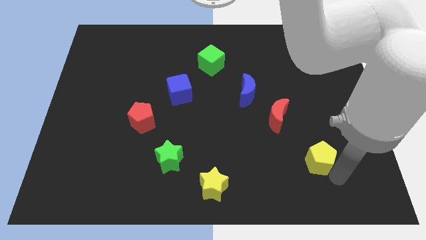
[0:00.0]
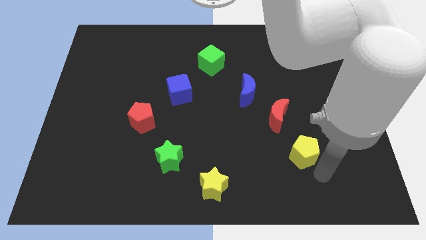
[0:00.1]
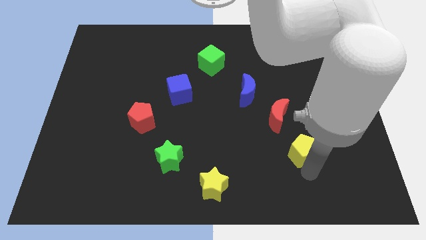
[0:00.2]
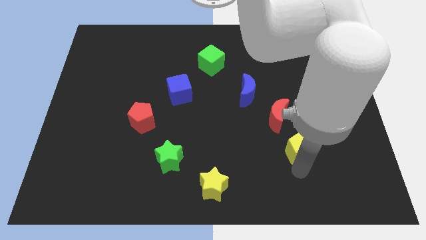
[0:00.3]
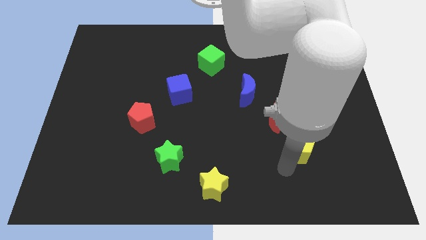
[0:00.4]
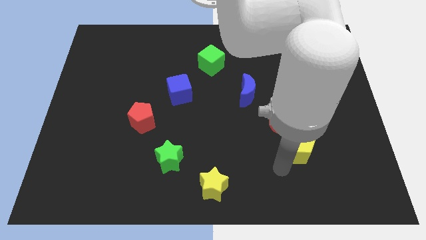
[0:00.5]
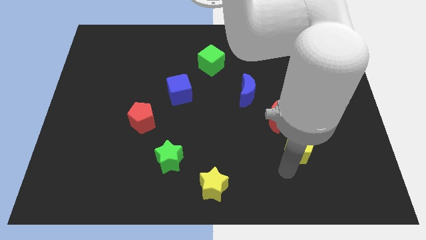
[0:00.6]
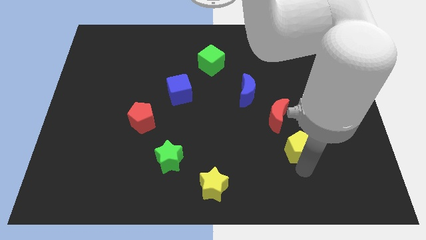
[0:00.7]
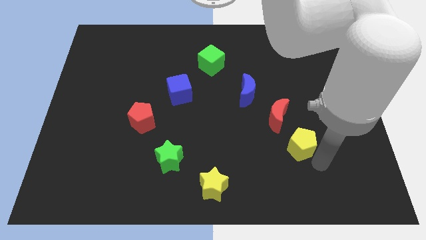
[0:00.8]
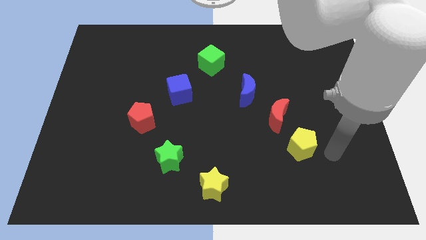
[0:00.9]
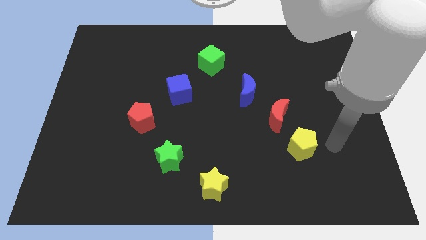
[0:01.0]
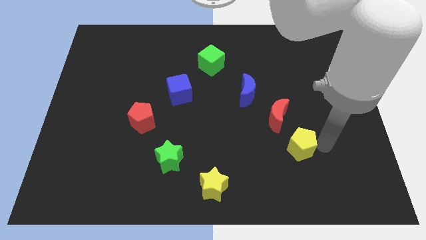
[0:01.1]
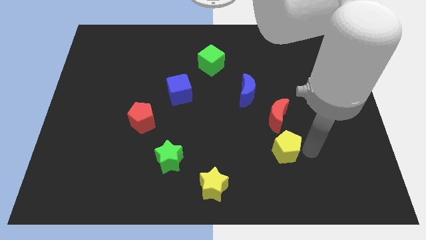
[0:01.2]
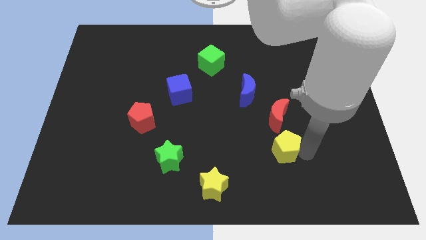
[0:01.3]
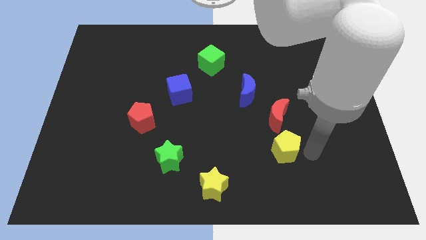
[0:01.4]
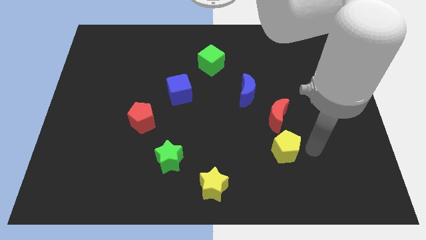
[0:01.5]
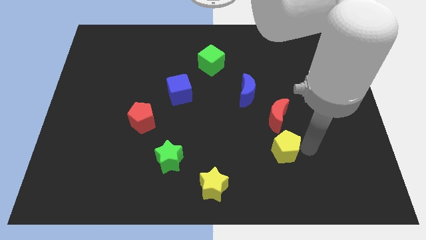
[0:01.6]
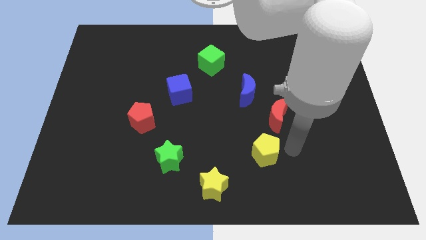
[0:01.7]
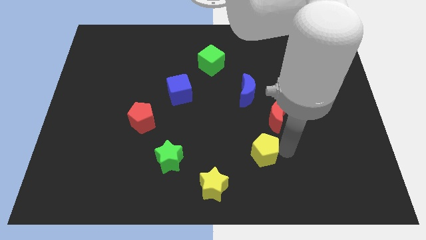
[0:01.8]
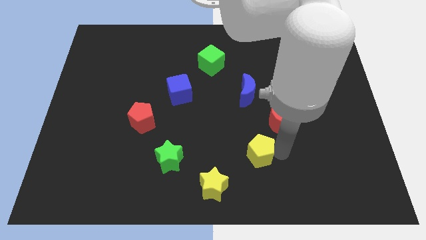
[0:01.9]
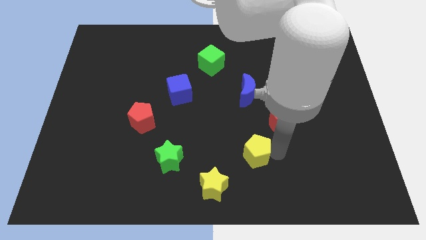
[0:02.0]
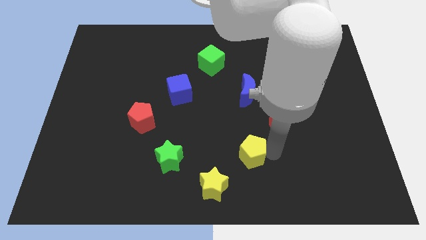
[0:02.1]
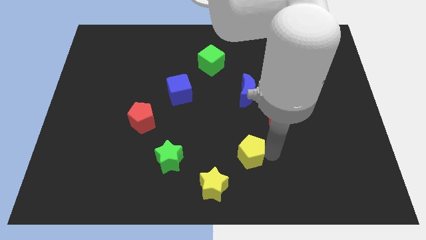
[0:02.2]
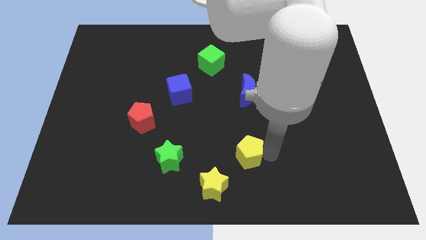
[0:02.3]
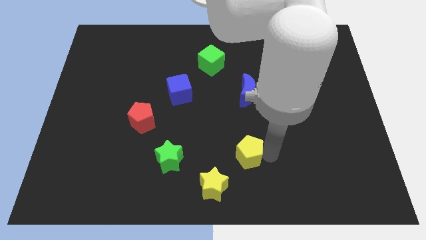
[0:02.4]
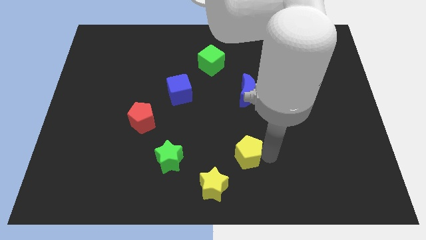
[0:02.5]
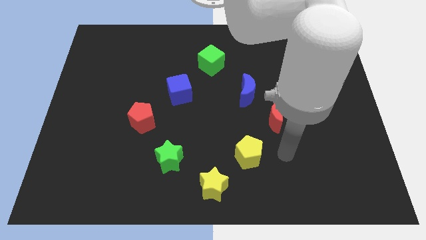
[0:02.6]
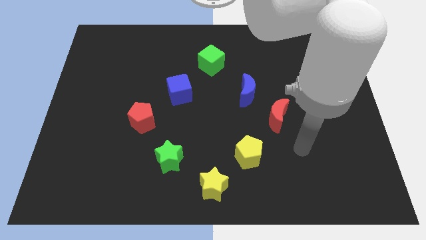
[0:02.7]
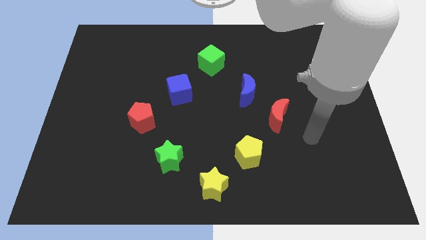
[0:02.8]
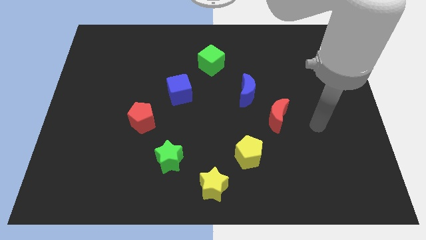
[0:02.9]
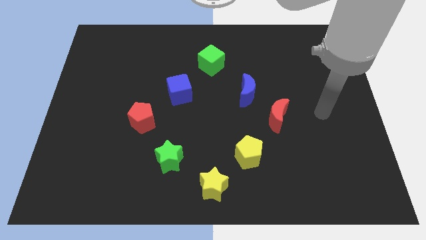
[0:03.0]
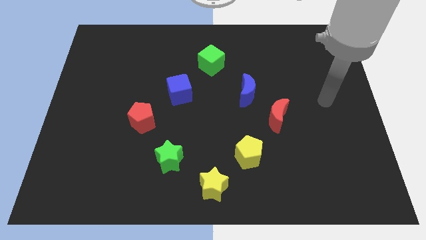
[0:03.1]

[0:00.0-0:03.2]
place the yellow pentagon diagonally in between the red moon and the yellow star

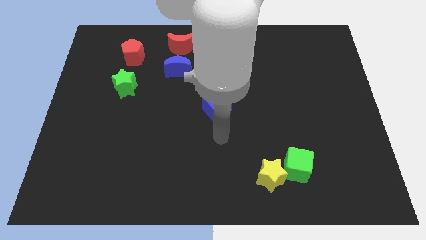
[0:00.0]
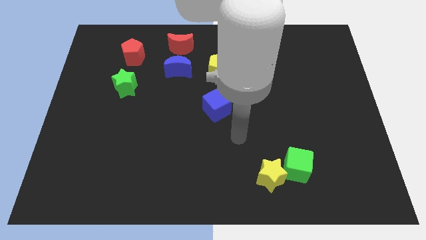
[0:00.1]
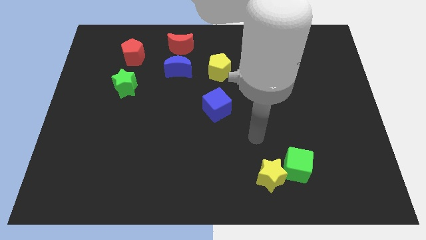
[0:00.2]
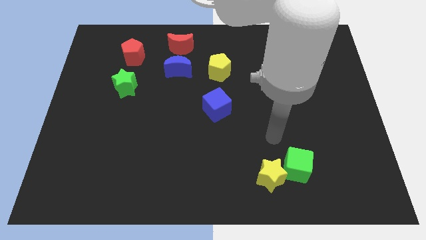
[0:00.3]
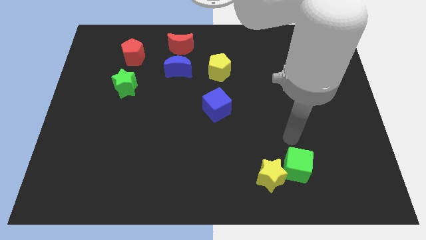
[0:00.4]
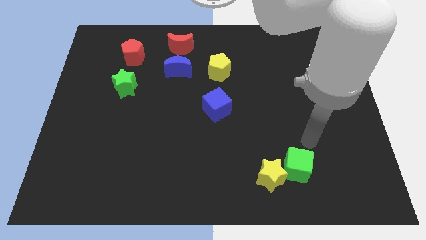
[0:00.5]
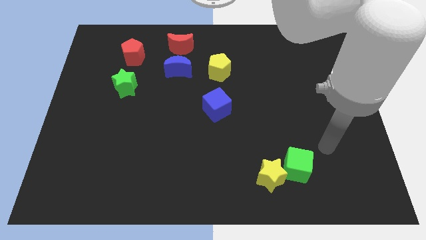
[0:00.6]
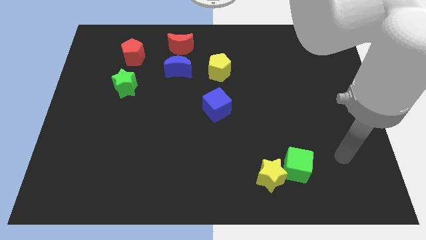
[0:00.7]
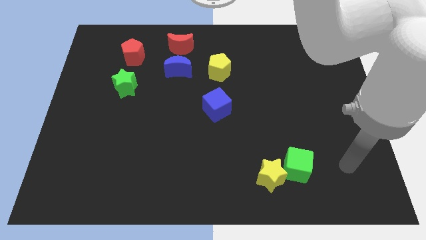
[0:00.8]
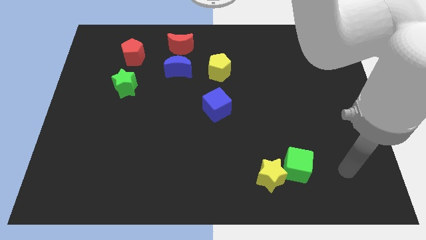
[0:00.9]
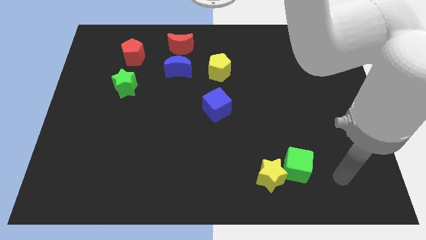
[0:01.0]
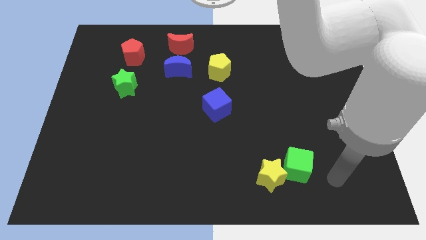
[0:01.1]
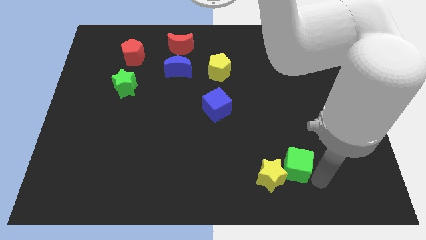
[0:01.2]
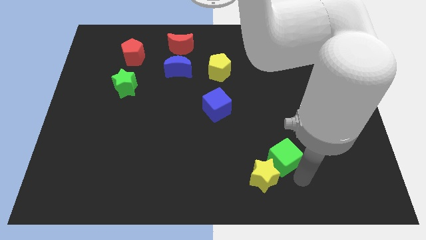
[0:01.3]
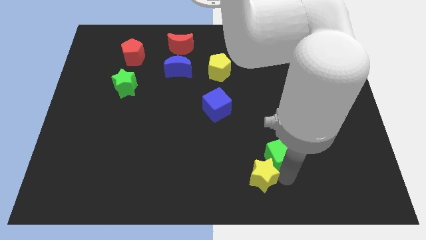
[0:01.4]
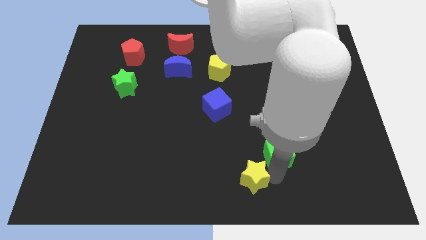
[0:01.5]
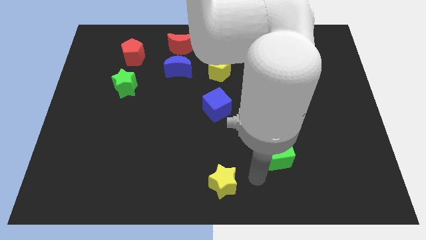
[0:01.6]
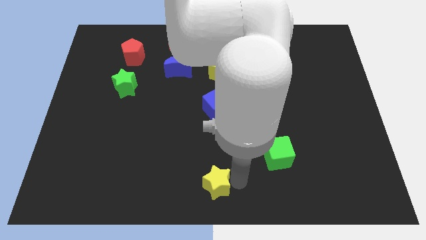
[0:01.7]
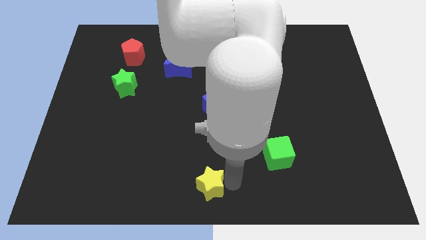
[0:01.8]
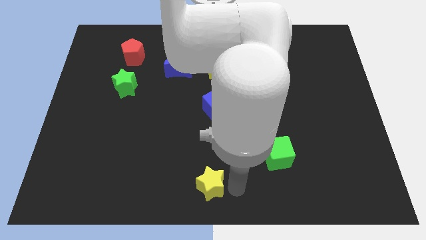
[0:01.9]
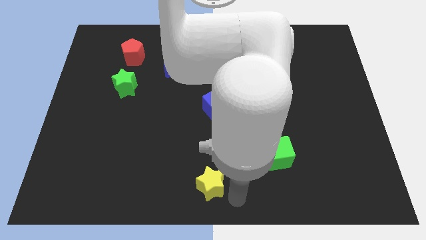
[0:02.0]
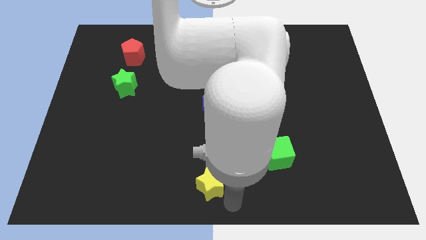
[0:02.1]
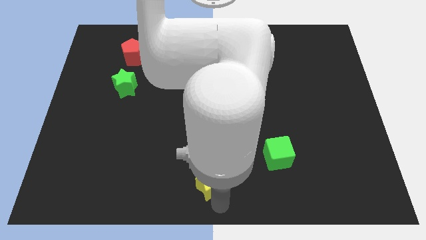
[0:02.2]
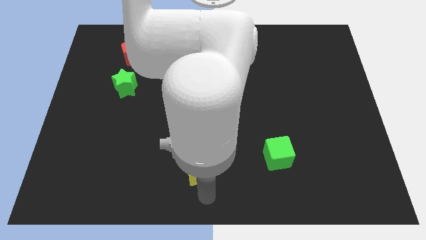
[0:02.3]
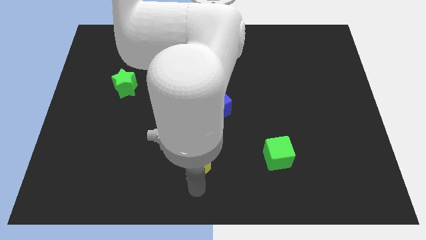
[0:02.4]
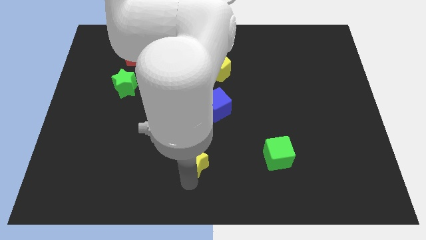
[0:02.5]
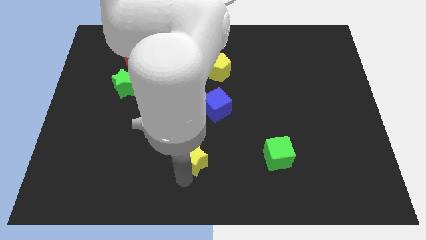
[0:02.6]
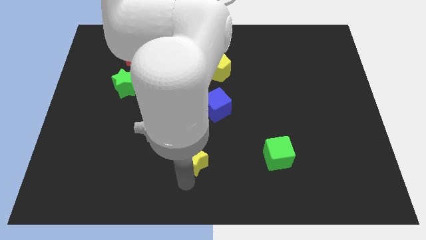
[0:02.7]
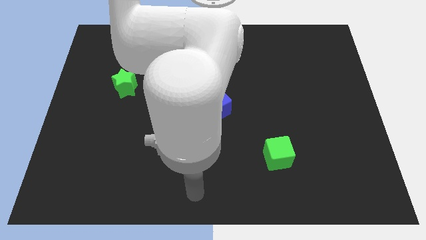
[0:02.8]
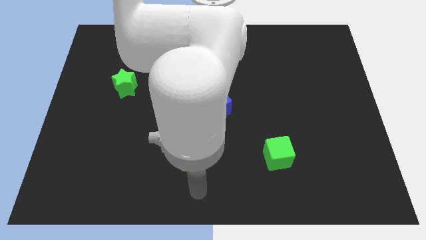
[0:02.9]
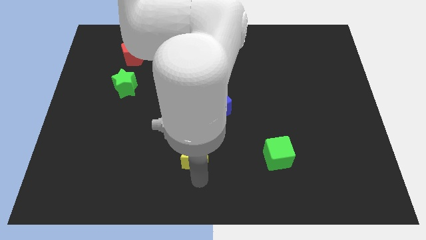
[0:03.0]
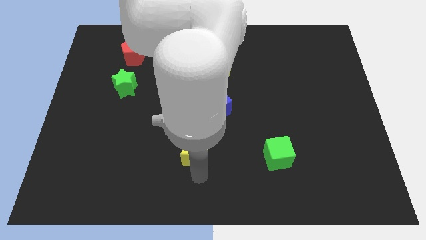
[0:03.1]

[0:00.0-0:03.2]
drag the yellow star to the left of the green cube

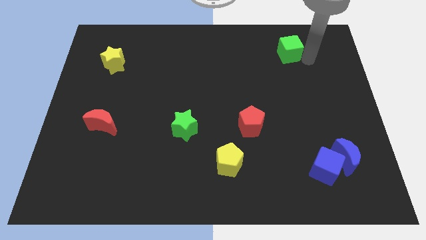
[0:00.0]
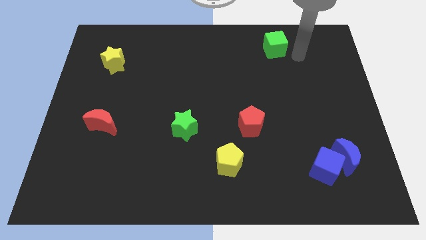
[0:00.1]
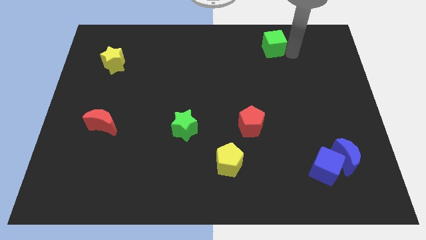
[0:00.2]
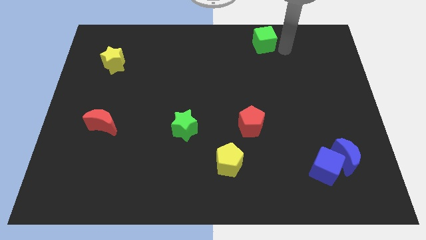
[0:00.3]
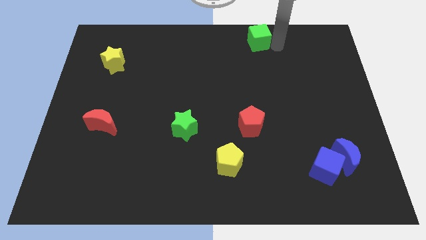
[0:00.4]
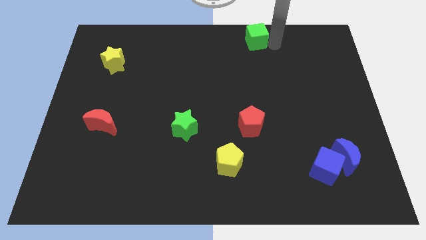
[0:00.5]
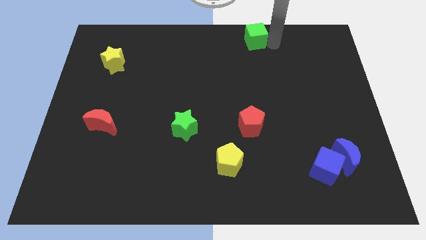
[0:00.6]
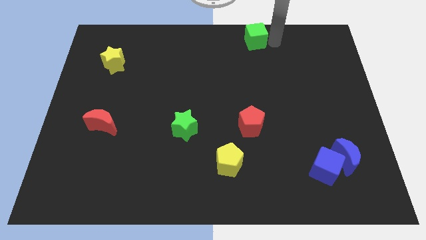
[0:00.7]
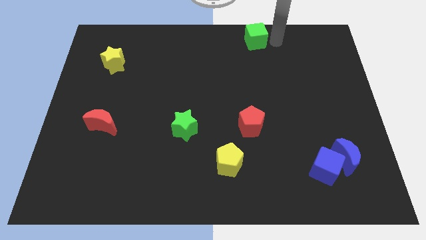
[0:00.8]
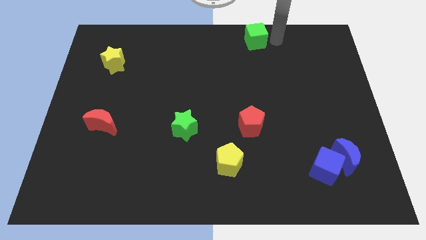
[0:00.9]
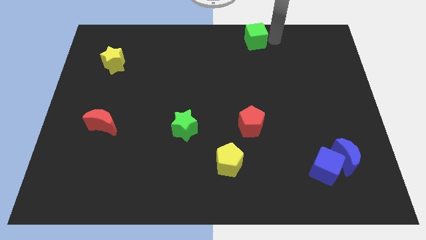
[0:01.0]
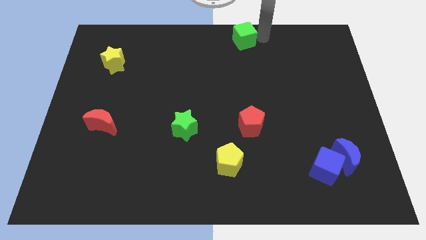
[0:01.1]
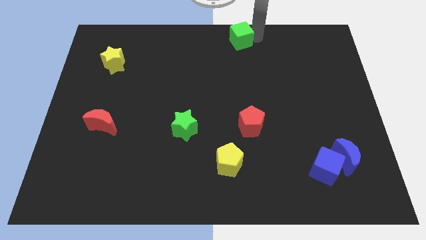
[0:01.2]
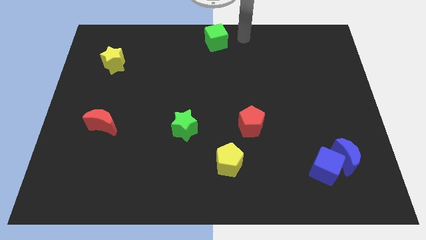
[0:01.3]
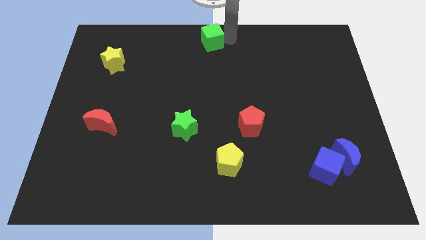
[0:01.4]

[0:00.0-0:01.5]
push green cube above yellow pentagon

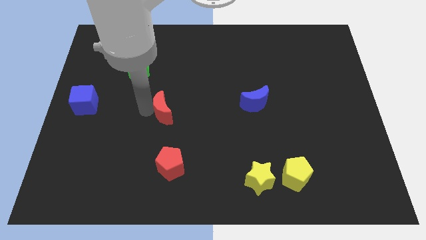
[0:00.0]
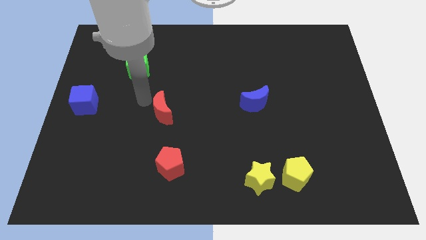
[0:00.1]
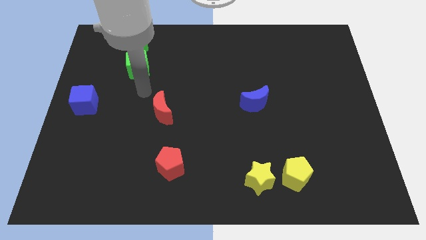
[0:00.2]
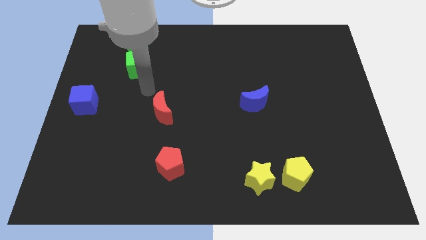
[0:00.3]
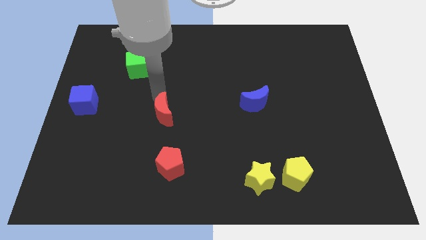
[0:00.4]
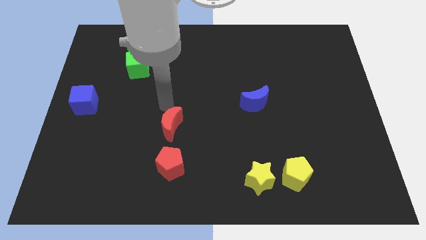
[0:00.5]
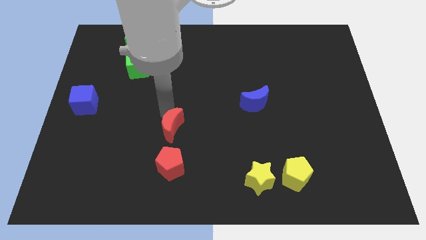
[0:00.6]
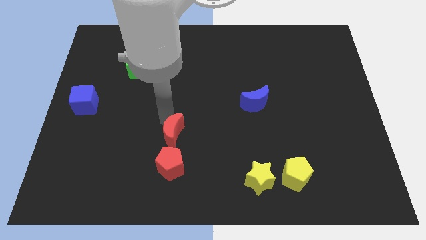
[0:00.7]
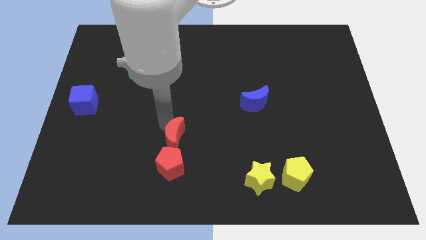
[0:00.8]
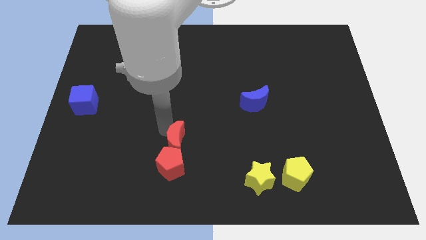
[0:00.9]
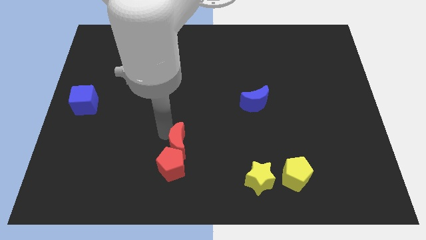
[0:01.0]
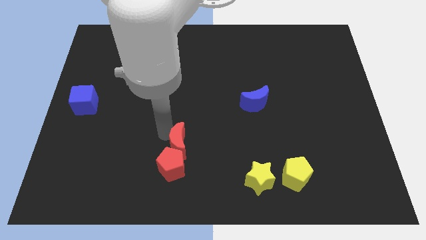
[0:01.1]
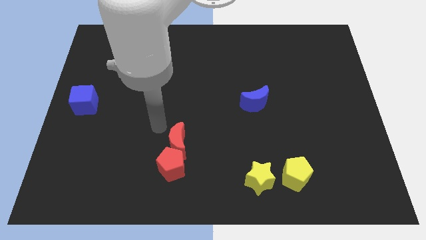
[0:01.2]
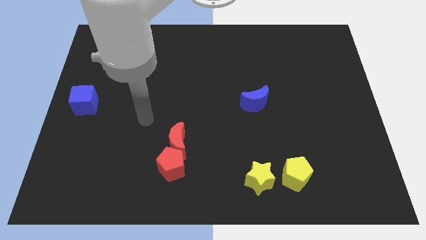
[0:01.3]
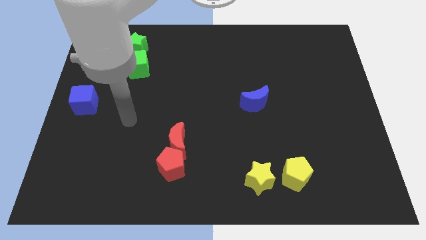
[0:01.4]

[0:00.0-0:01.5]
slide the red crescent into the red pentagon
